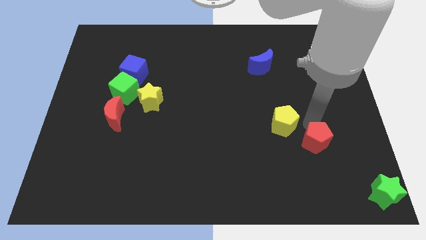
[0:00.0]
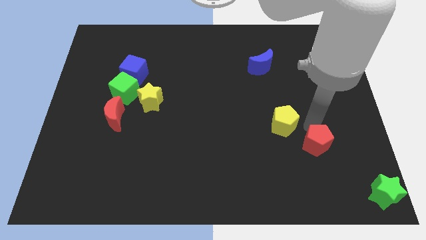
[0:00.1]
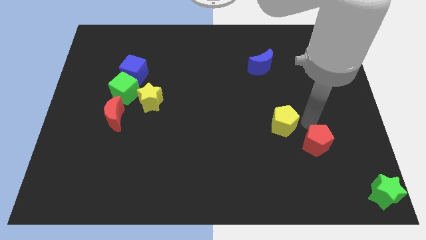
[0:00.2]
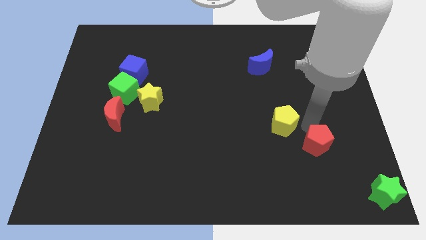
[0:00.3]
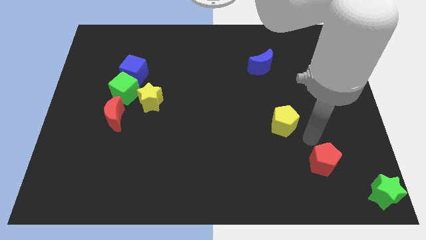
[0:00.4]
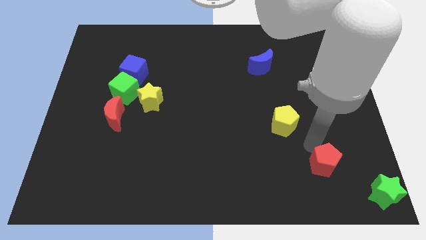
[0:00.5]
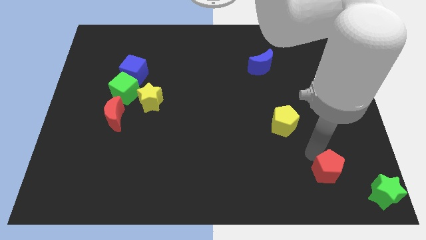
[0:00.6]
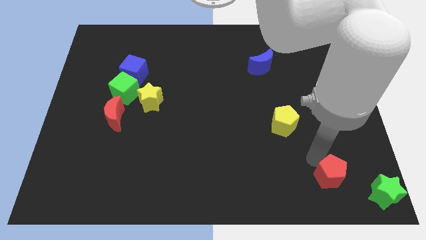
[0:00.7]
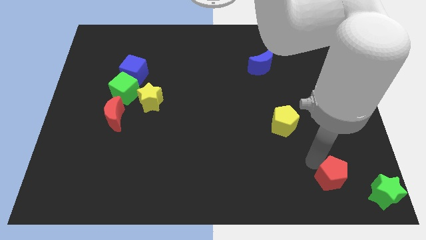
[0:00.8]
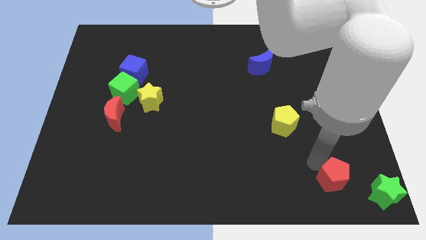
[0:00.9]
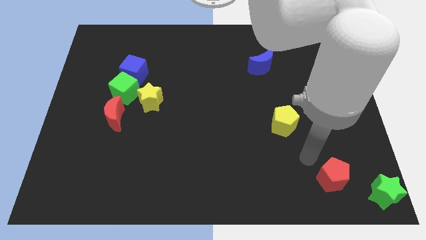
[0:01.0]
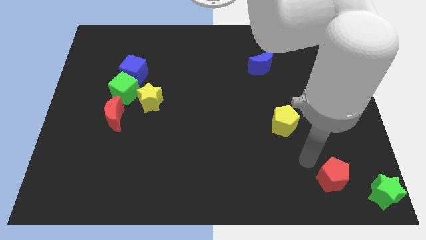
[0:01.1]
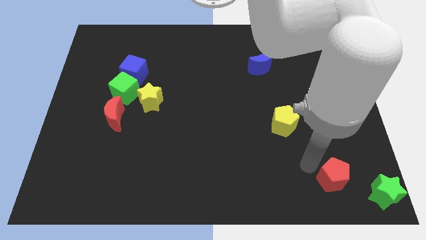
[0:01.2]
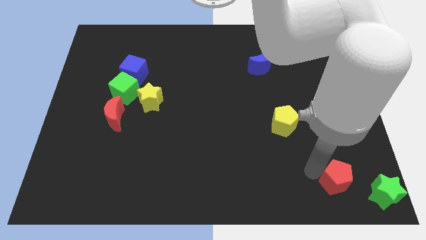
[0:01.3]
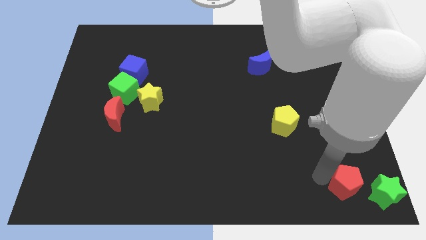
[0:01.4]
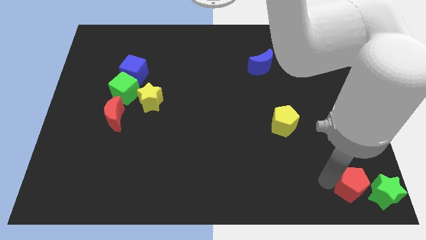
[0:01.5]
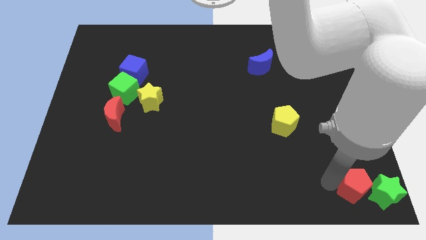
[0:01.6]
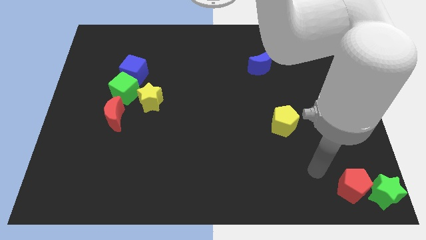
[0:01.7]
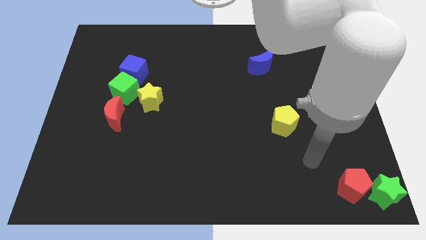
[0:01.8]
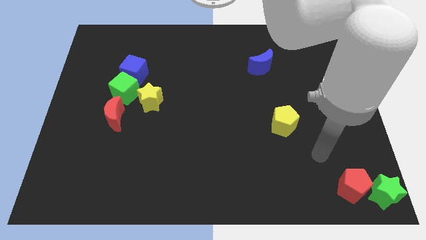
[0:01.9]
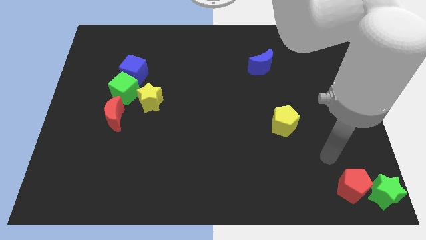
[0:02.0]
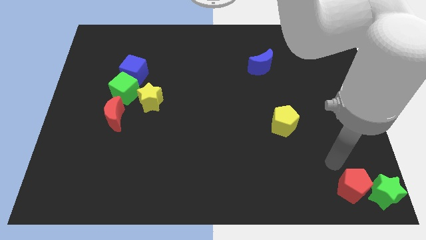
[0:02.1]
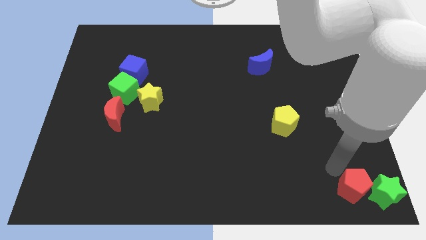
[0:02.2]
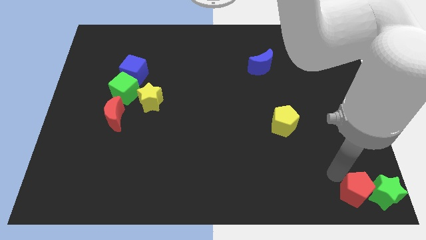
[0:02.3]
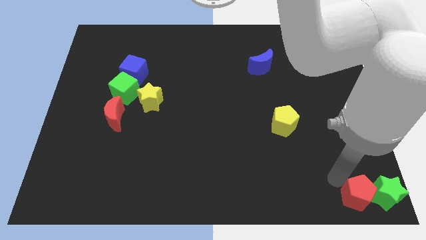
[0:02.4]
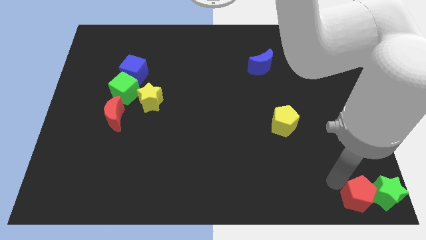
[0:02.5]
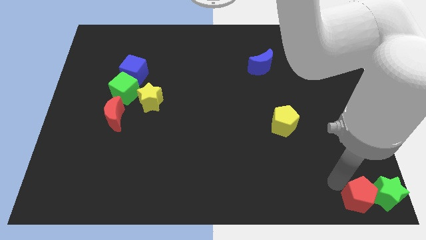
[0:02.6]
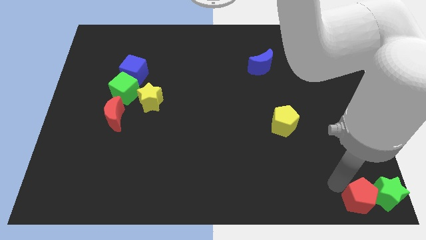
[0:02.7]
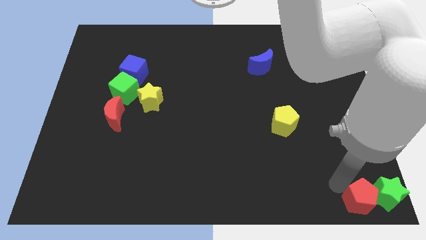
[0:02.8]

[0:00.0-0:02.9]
move the red pentagon towards the bottom right corner of the board

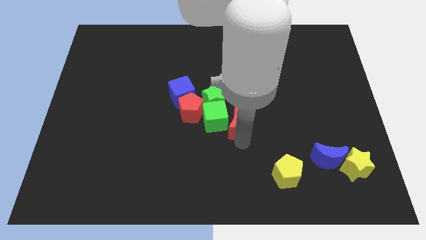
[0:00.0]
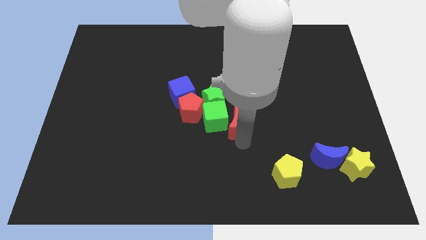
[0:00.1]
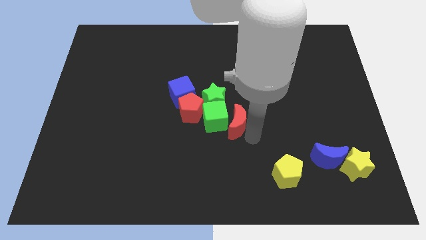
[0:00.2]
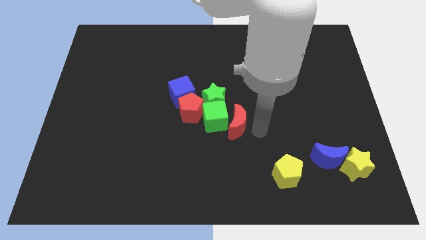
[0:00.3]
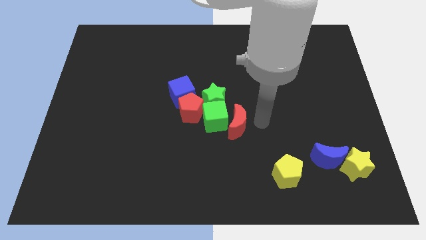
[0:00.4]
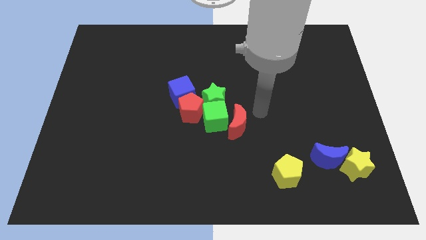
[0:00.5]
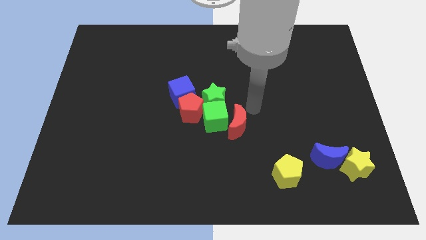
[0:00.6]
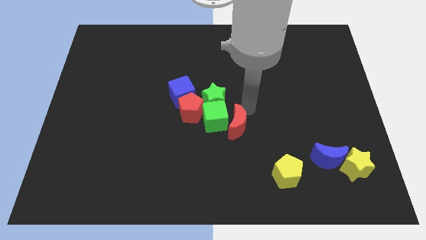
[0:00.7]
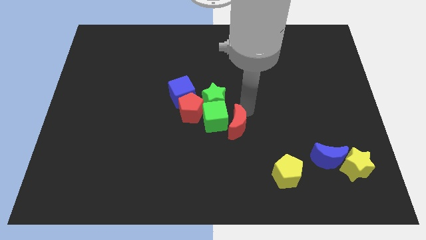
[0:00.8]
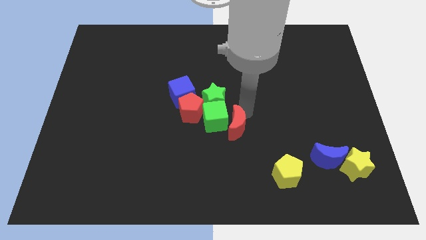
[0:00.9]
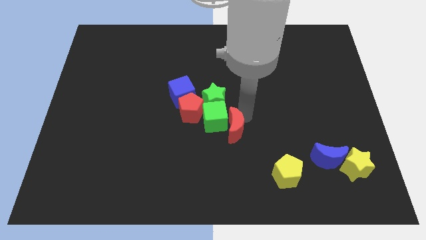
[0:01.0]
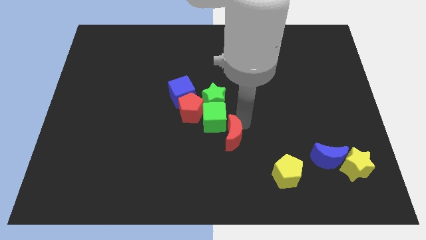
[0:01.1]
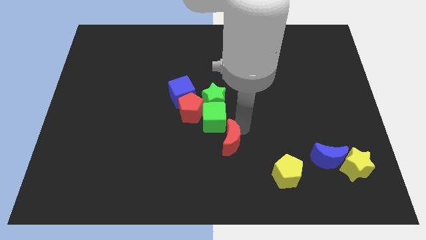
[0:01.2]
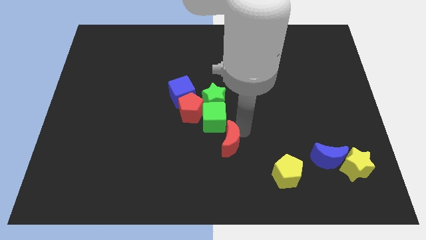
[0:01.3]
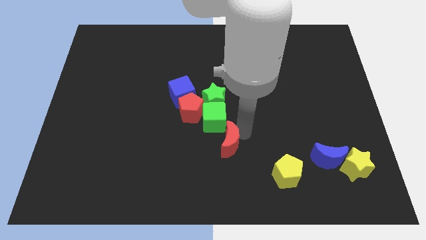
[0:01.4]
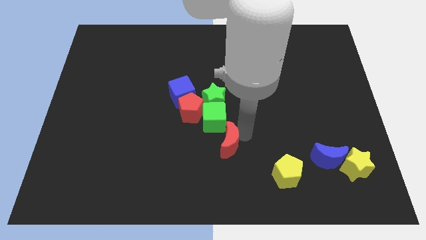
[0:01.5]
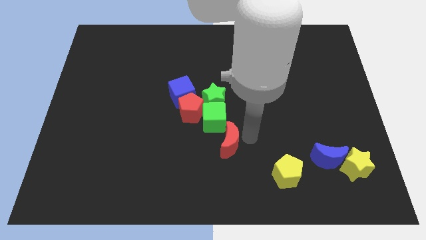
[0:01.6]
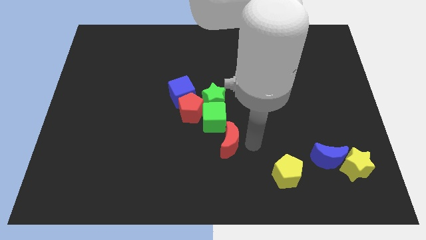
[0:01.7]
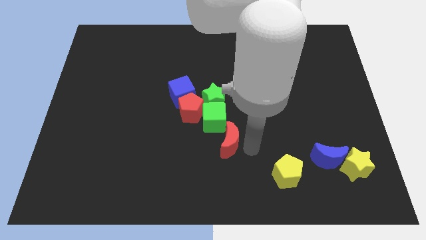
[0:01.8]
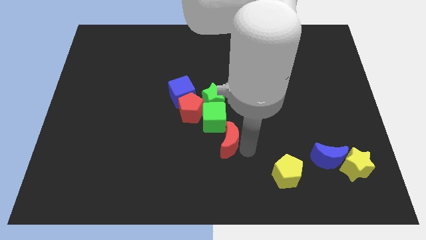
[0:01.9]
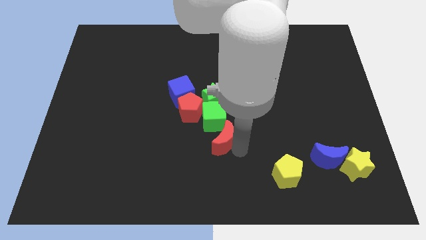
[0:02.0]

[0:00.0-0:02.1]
place the red crescent below the green cube

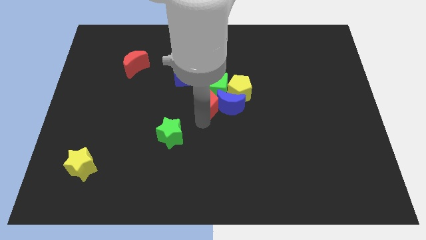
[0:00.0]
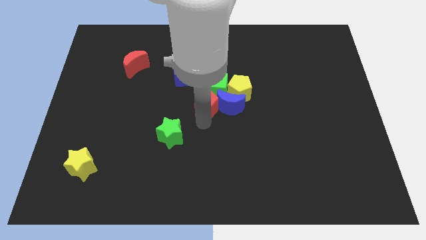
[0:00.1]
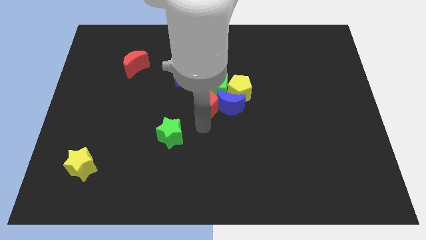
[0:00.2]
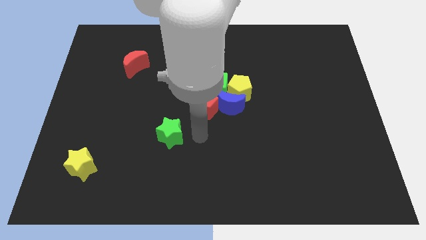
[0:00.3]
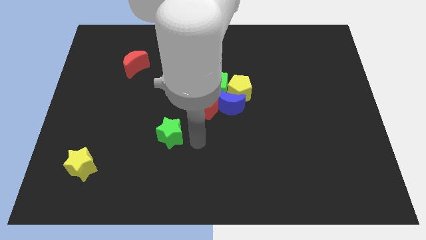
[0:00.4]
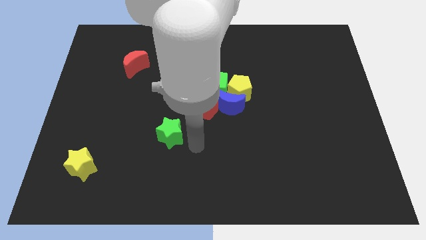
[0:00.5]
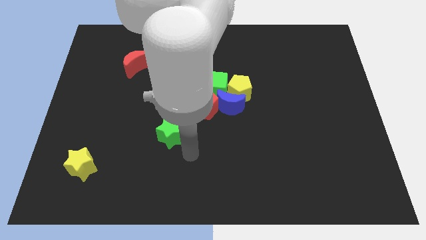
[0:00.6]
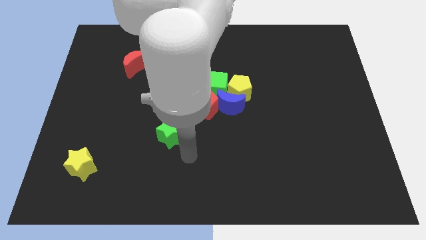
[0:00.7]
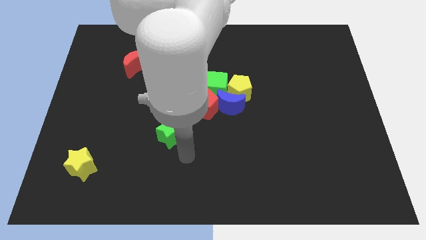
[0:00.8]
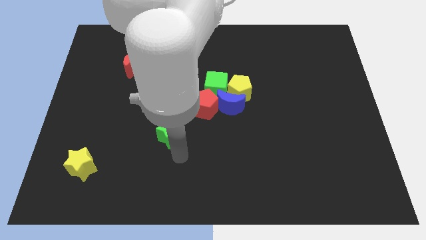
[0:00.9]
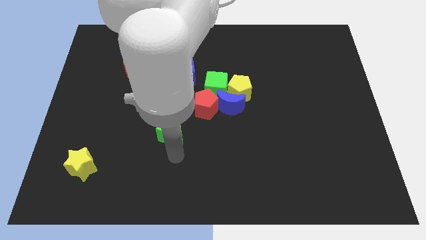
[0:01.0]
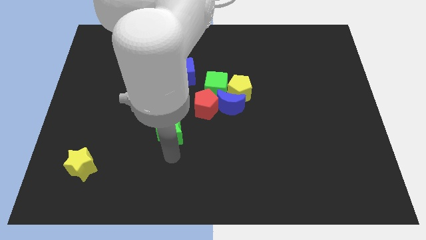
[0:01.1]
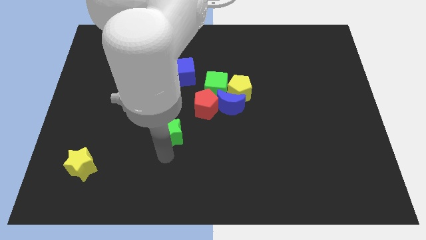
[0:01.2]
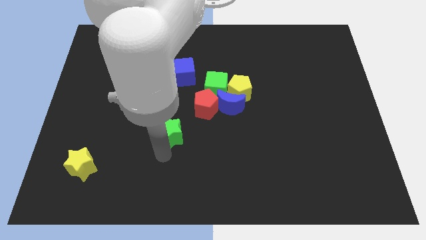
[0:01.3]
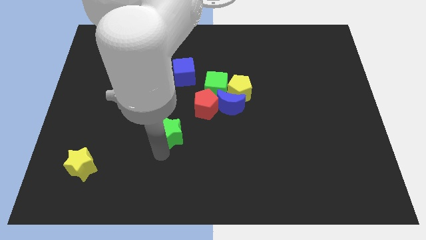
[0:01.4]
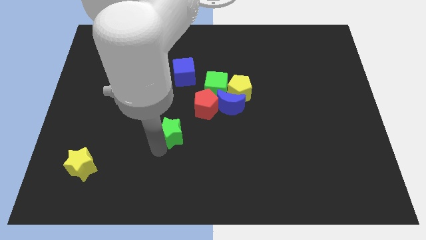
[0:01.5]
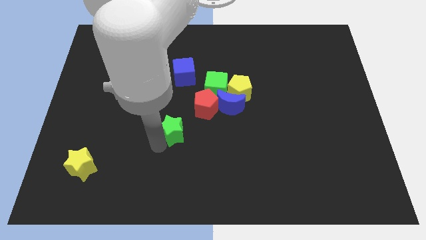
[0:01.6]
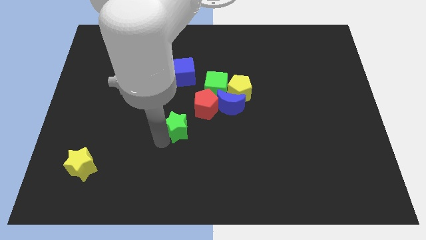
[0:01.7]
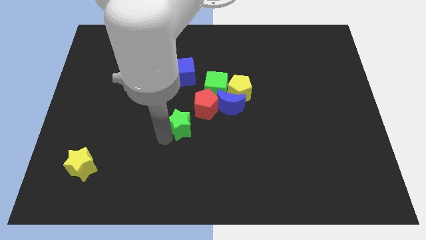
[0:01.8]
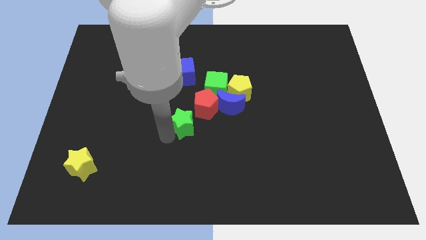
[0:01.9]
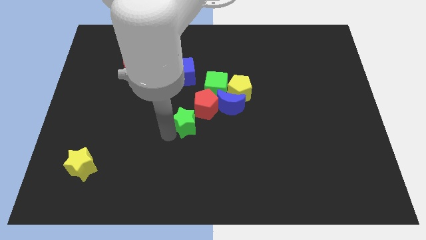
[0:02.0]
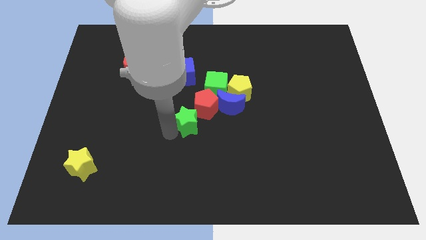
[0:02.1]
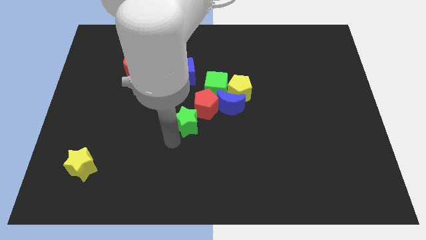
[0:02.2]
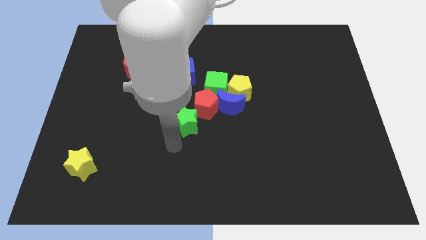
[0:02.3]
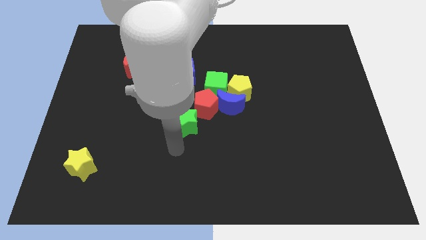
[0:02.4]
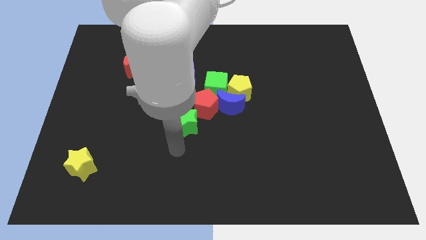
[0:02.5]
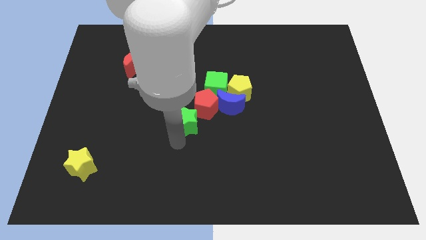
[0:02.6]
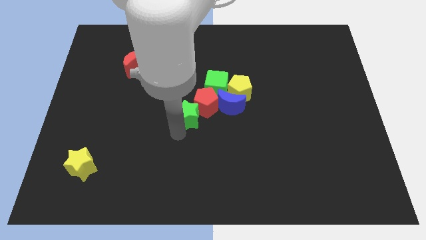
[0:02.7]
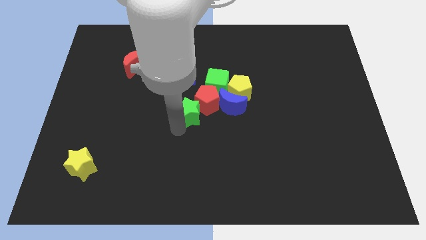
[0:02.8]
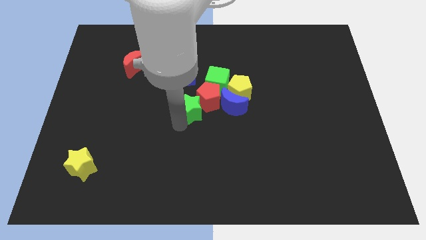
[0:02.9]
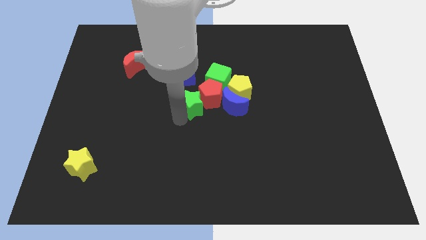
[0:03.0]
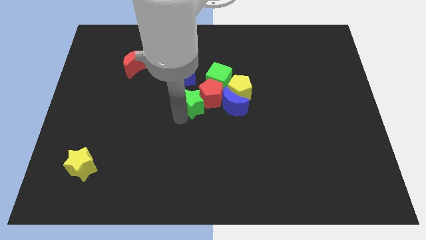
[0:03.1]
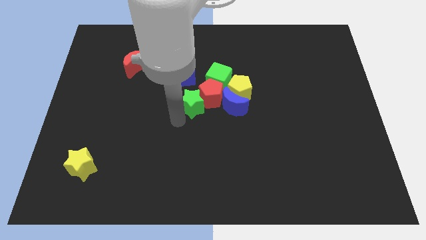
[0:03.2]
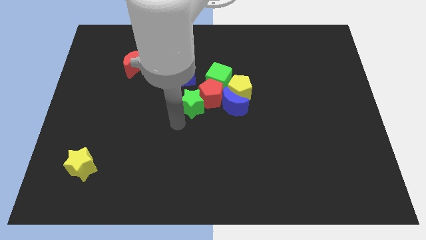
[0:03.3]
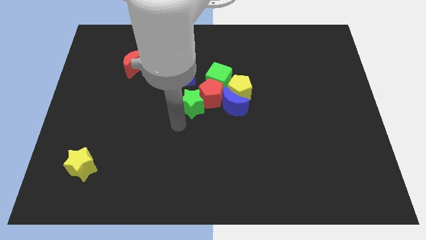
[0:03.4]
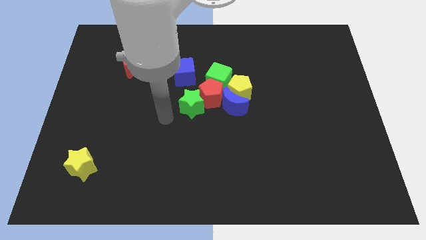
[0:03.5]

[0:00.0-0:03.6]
push green star in red pentagon

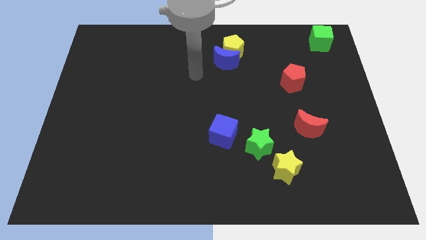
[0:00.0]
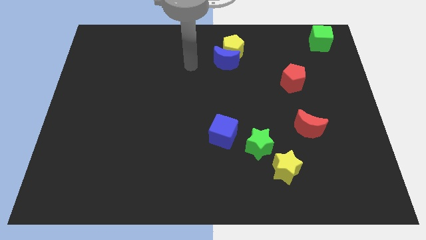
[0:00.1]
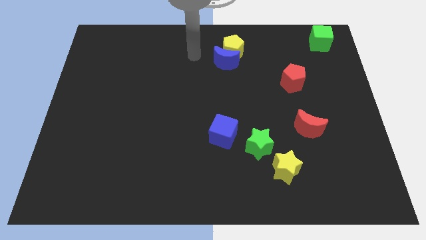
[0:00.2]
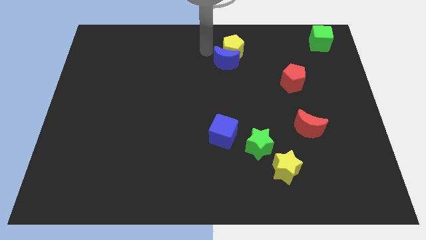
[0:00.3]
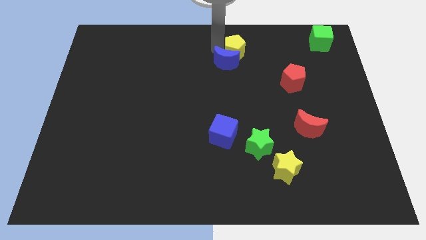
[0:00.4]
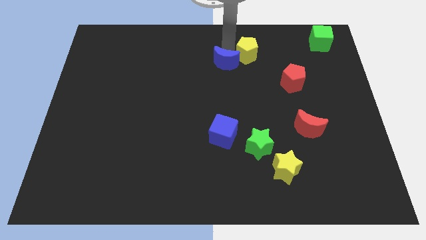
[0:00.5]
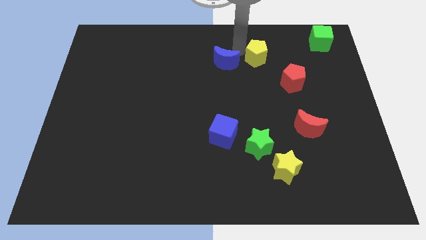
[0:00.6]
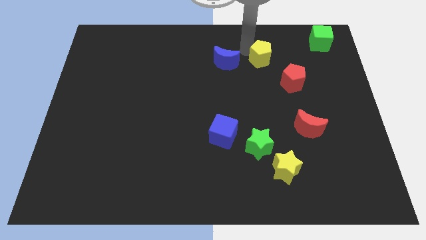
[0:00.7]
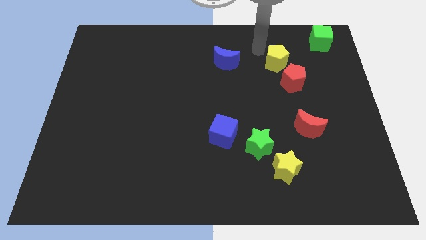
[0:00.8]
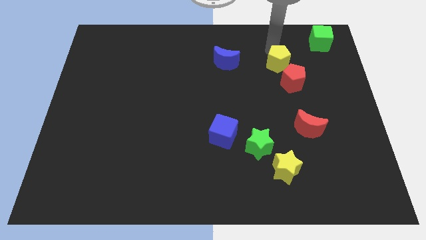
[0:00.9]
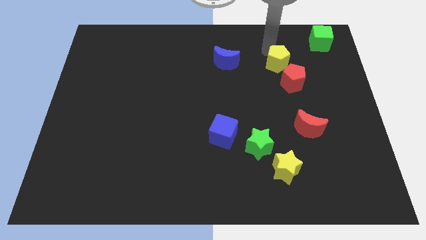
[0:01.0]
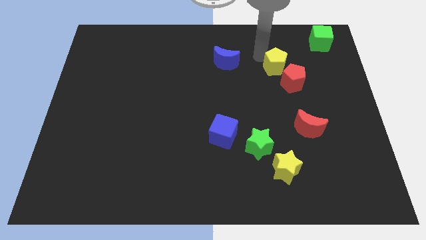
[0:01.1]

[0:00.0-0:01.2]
separate yellow pentagon from blue crescent
